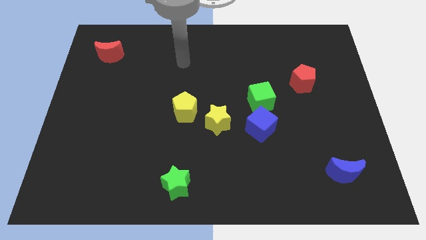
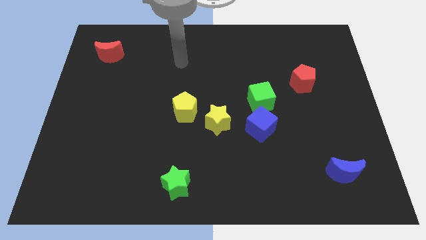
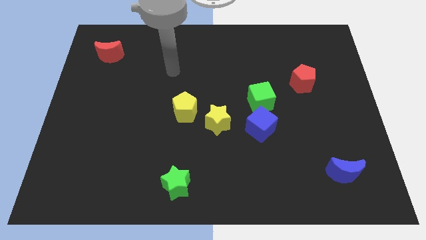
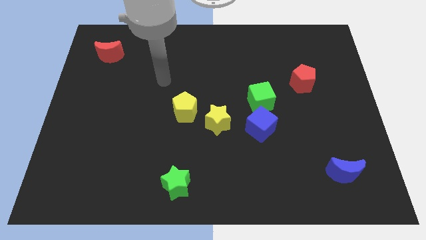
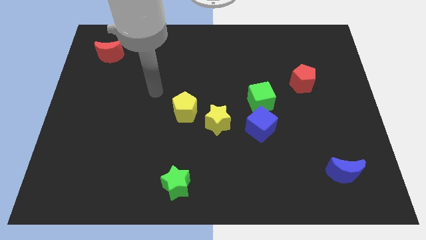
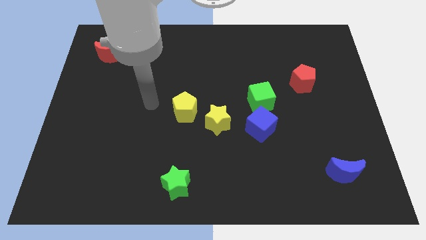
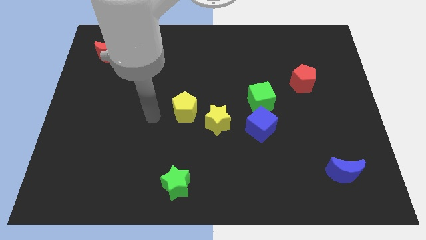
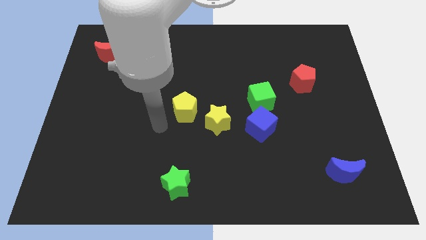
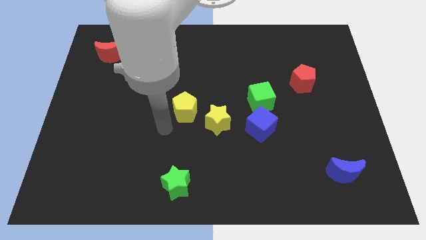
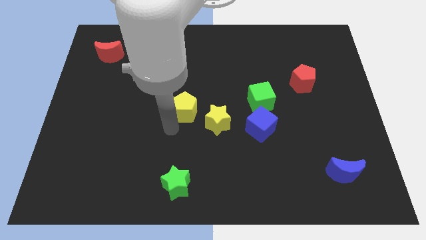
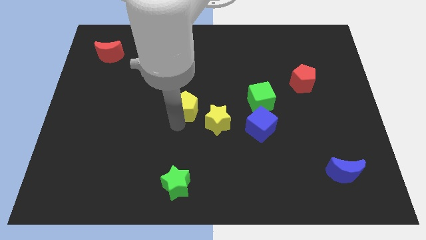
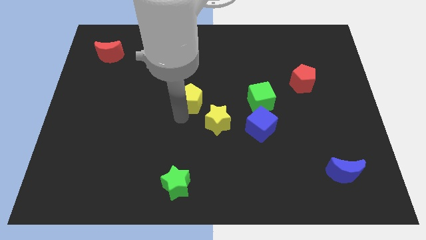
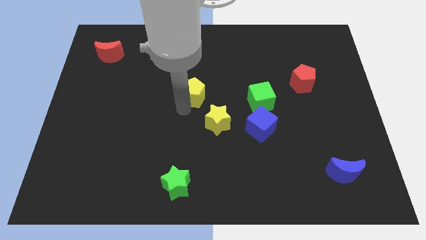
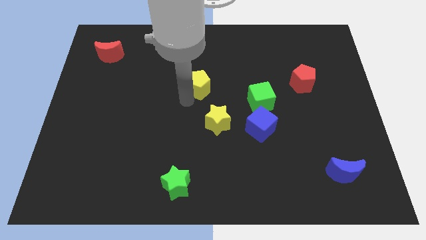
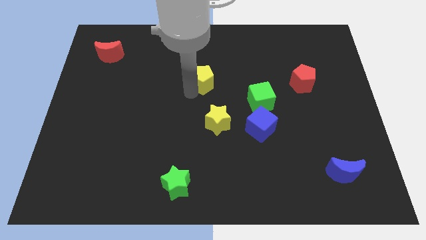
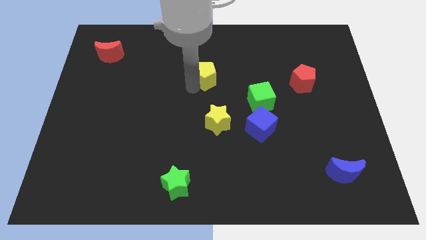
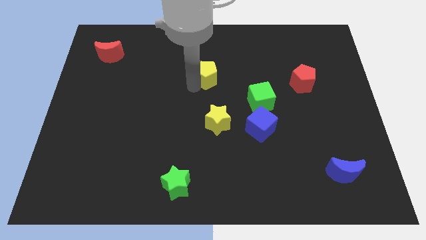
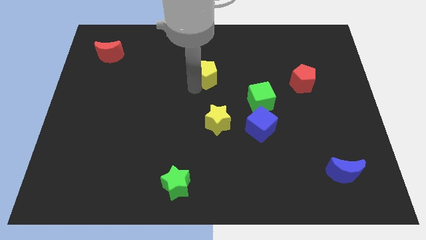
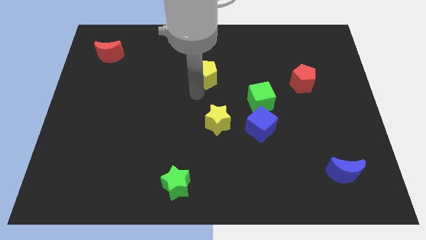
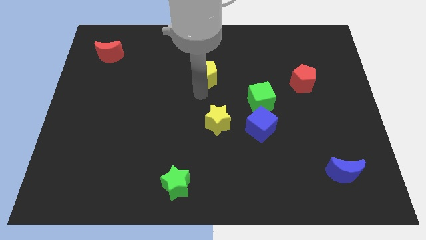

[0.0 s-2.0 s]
move the yellow pentagon to the top left side of the yellow star

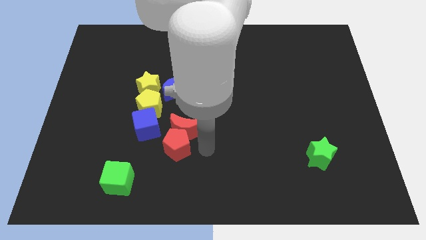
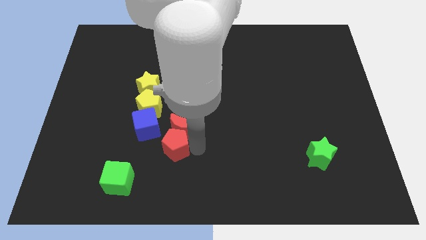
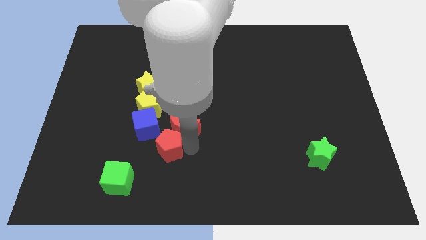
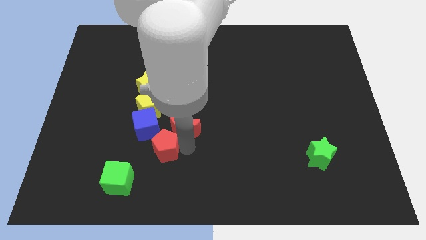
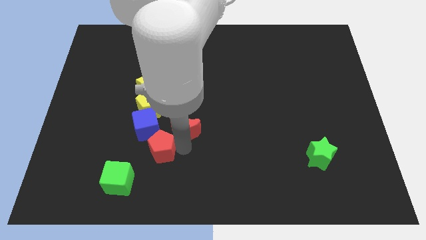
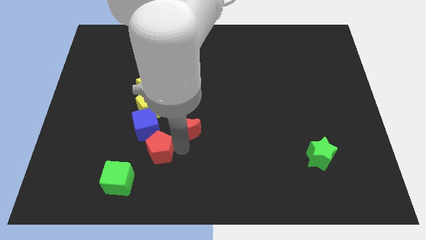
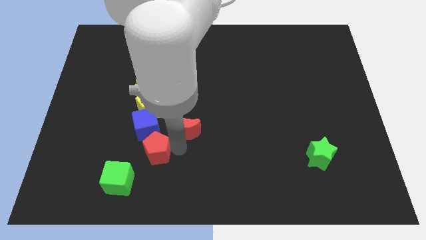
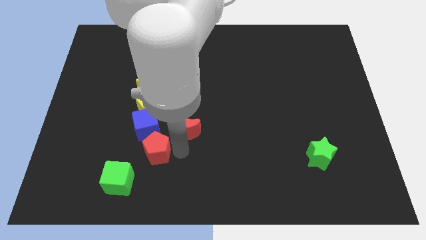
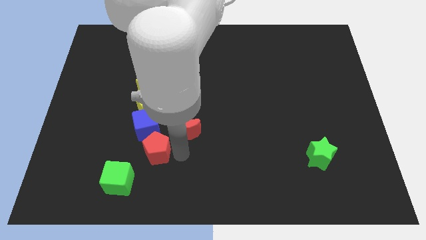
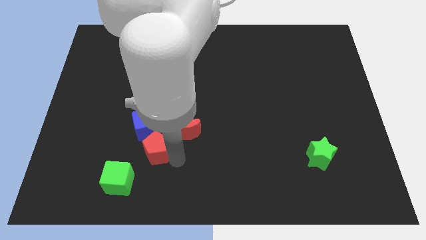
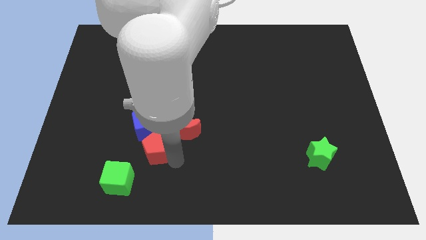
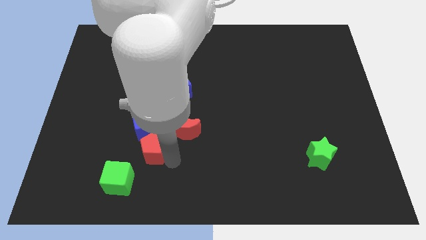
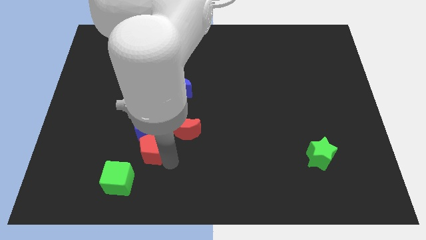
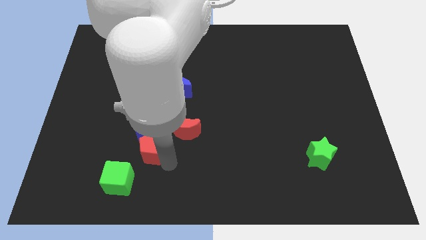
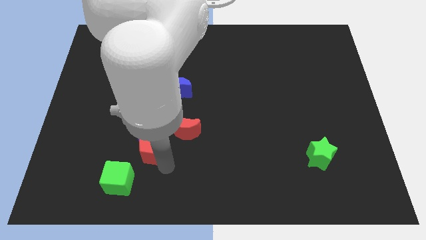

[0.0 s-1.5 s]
place red pentagon below the blue block

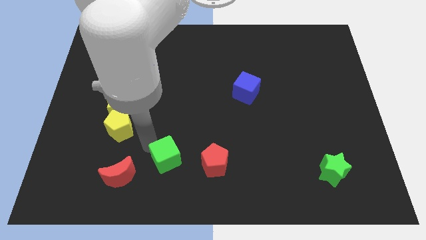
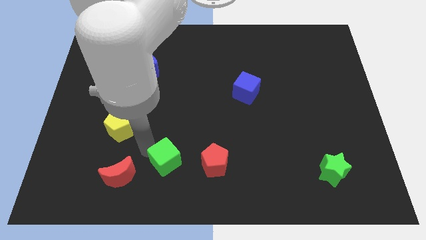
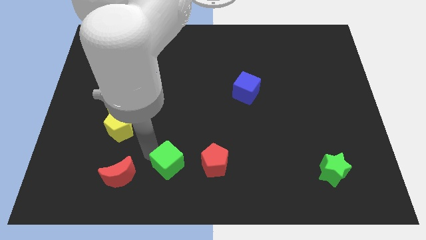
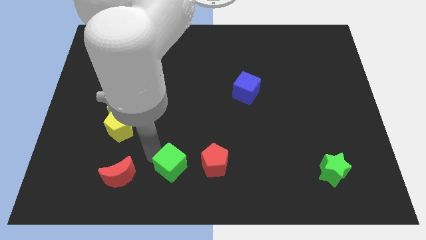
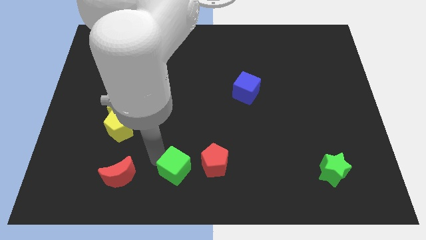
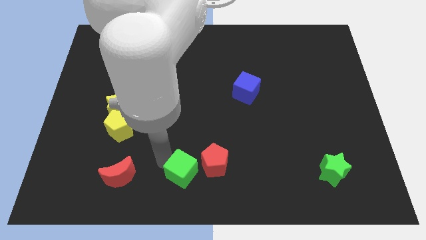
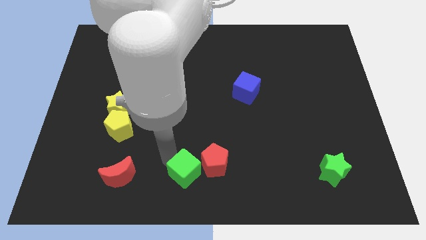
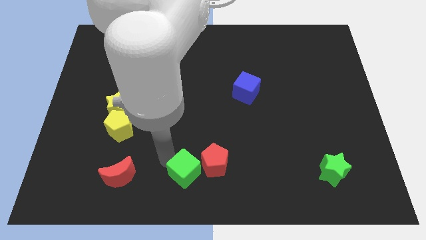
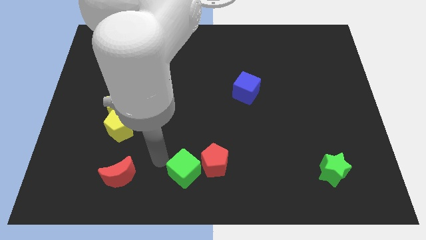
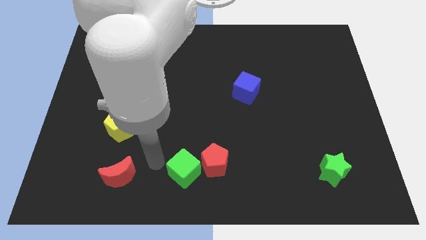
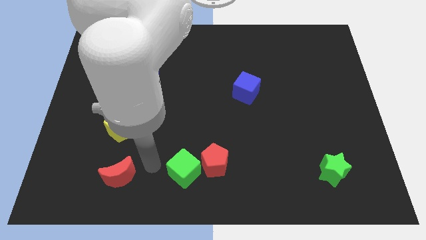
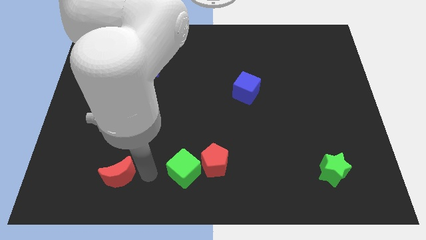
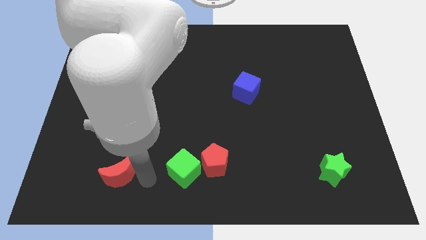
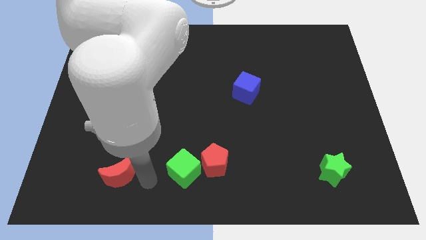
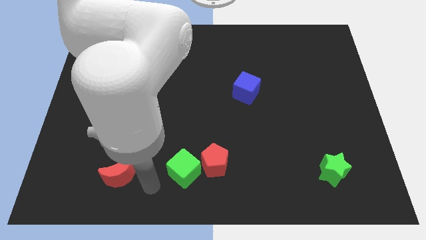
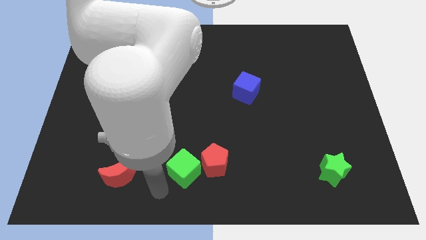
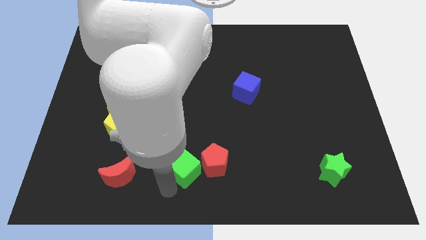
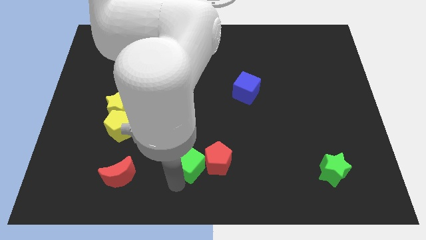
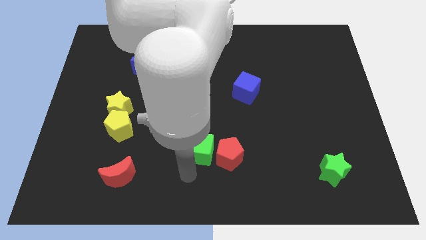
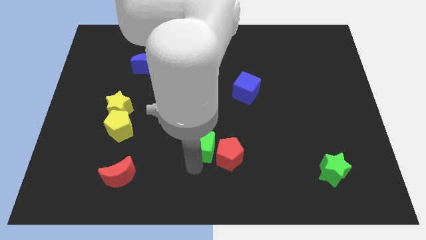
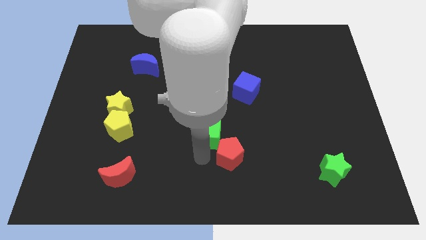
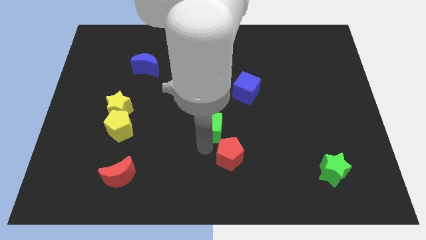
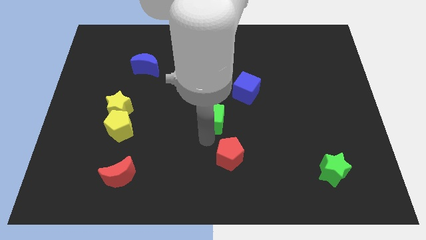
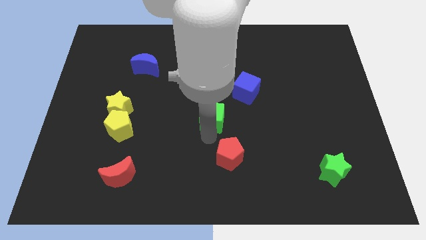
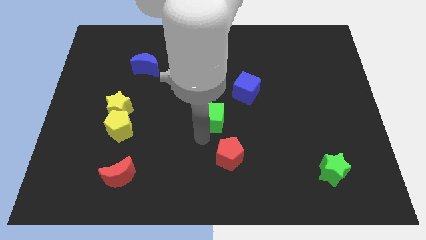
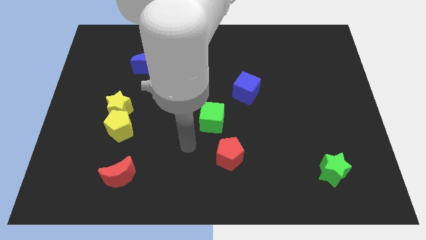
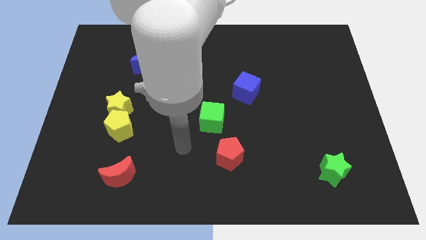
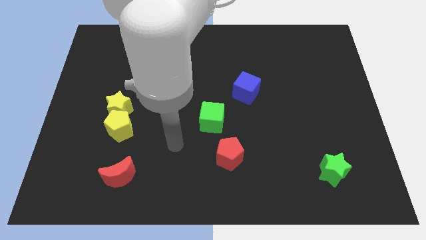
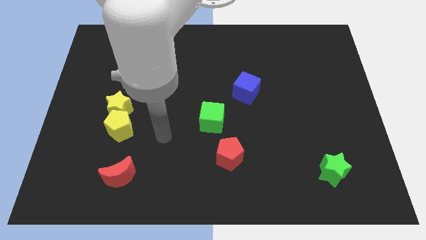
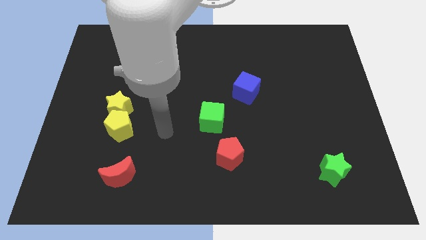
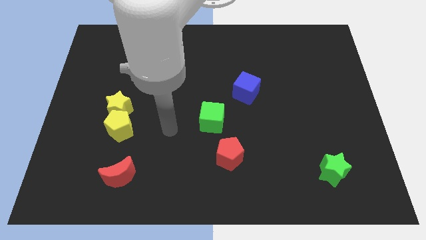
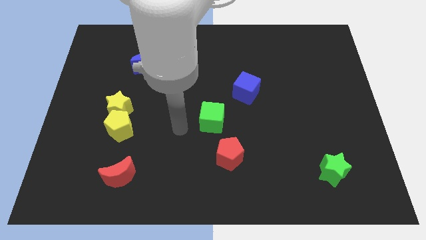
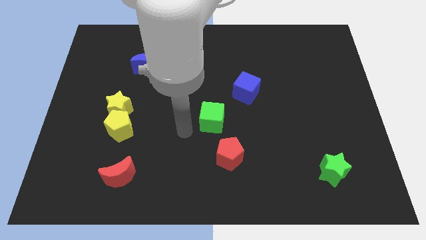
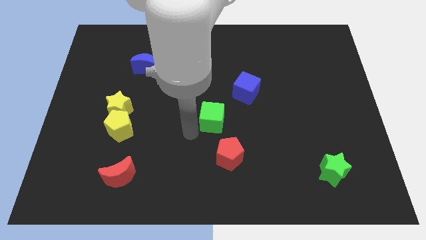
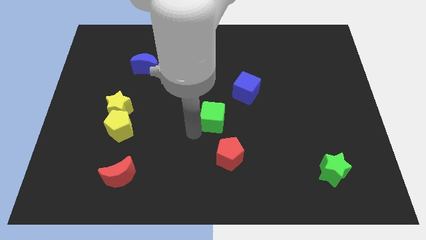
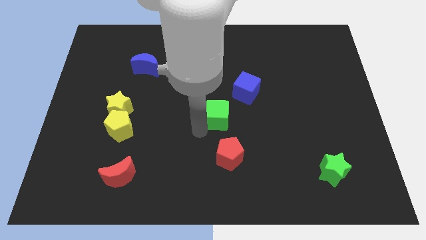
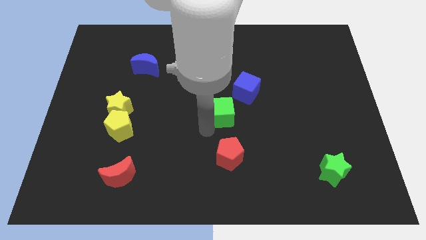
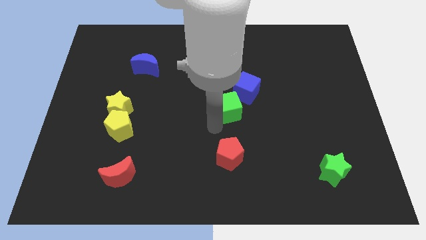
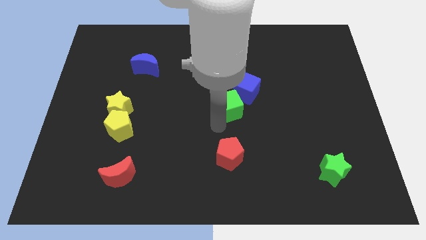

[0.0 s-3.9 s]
push the green cube towards blue cube

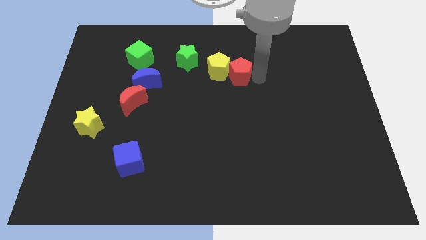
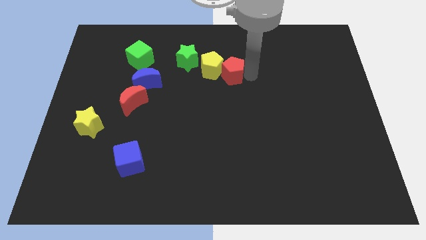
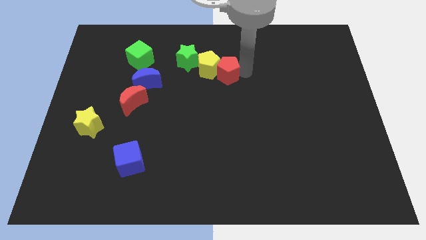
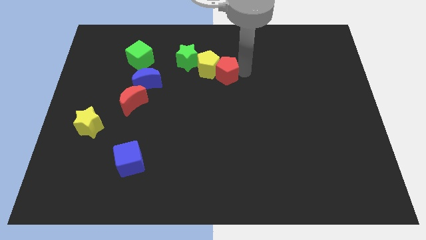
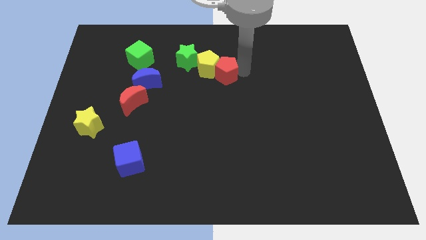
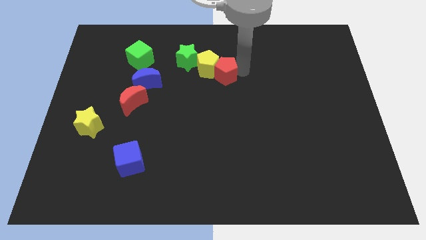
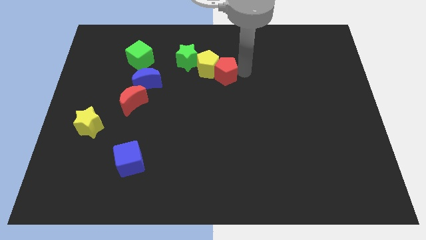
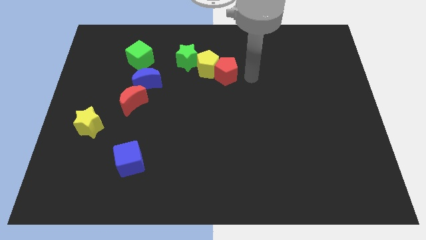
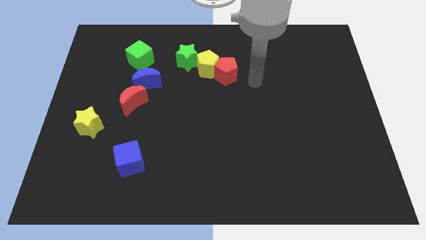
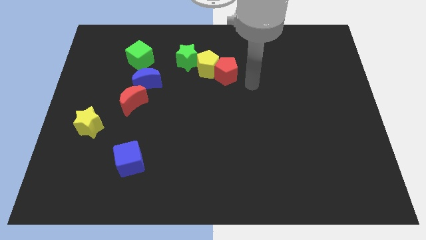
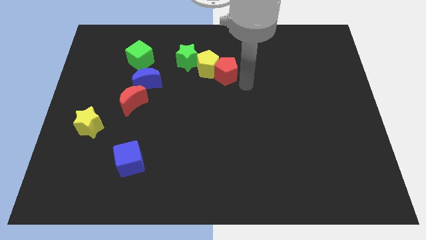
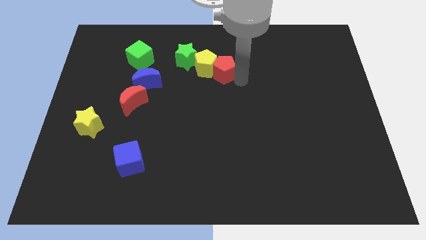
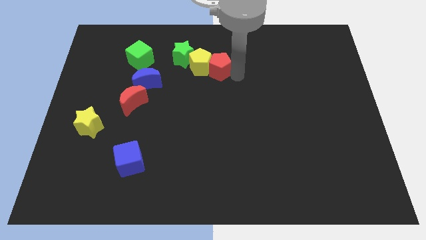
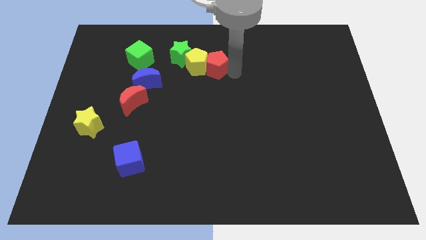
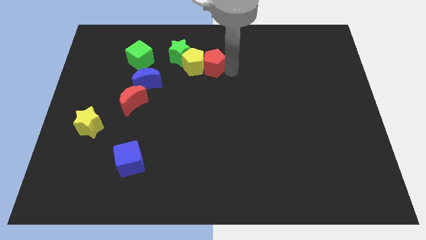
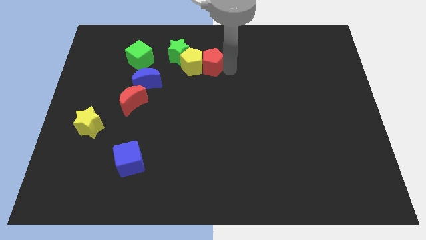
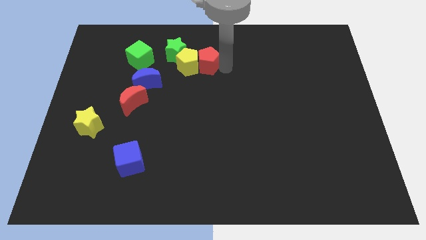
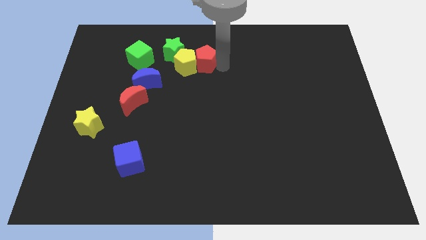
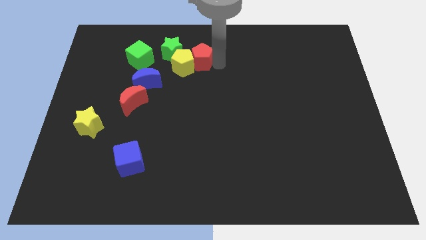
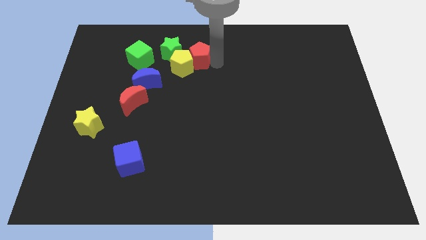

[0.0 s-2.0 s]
push the yellow pentagon with the red pentagon into the green star
